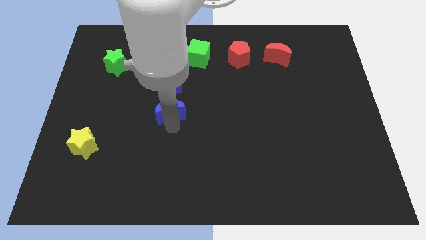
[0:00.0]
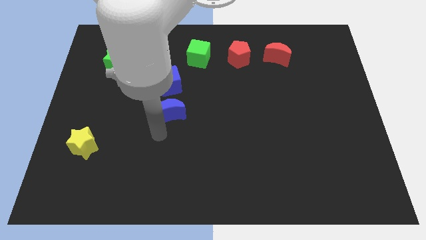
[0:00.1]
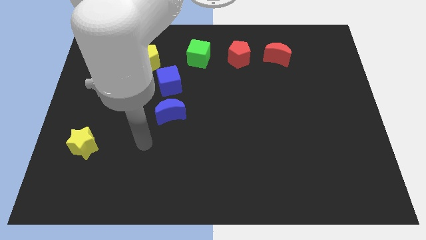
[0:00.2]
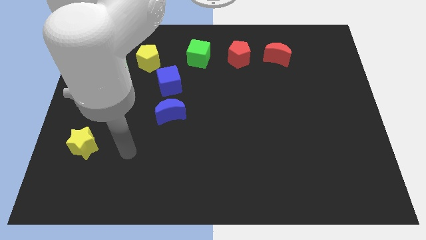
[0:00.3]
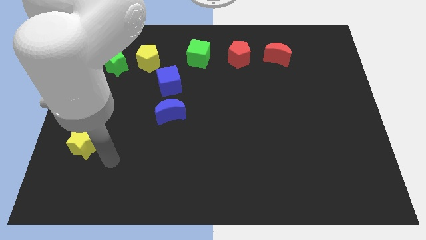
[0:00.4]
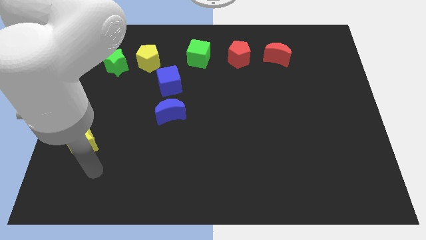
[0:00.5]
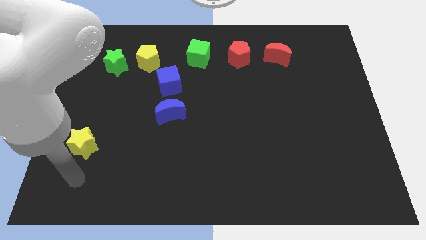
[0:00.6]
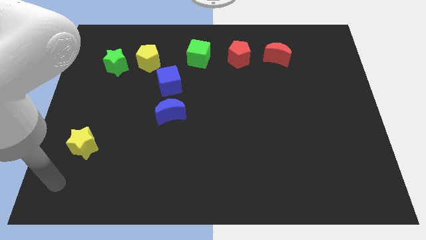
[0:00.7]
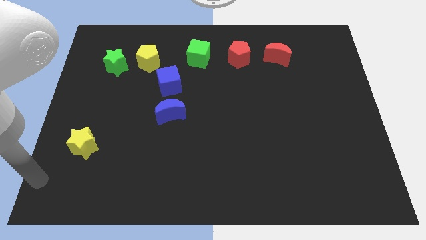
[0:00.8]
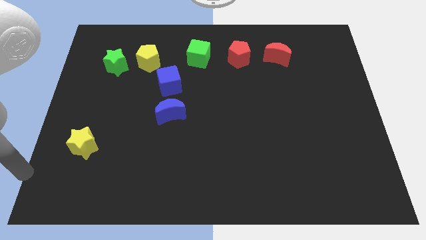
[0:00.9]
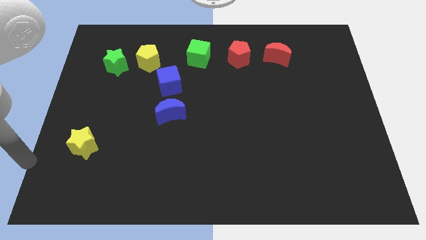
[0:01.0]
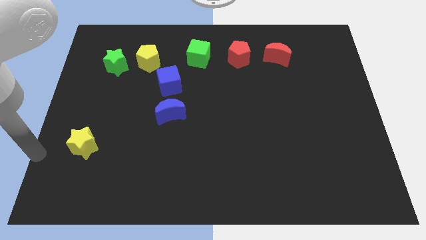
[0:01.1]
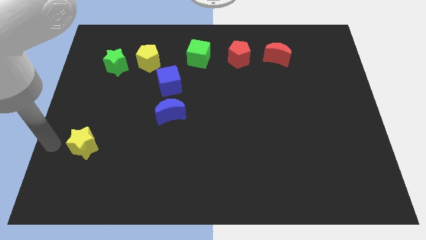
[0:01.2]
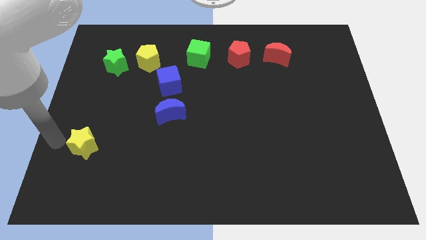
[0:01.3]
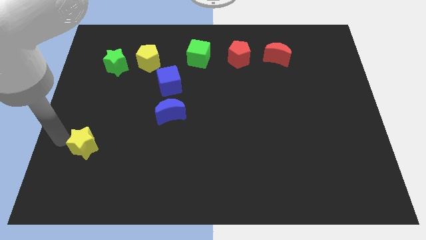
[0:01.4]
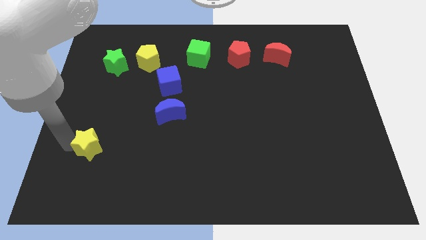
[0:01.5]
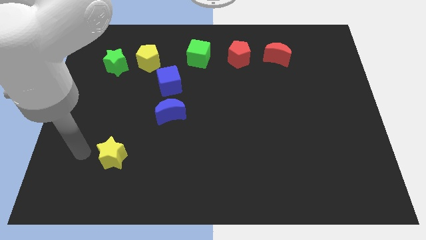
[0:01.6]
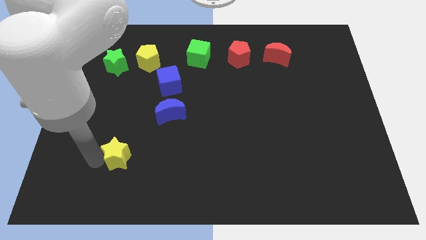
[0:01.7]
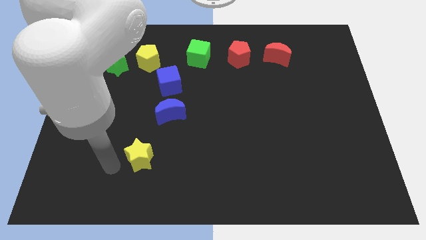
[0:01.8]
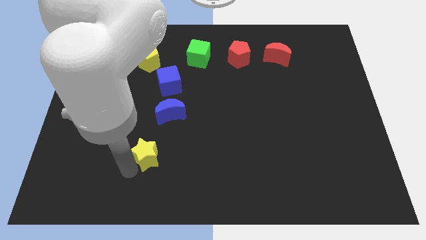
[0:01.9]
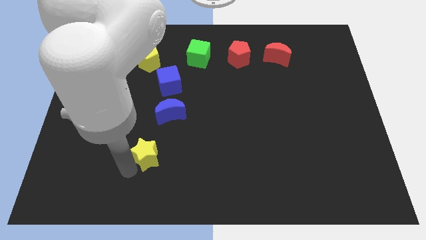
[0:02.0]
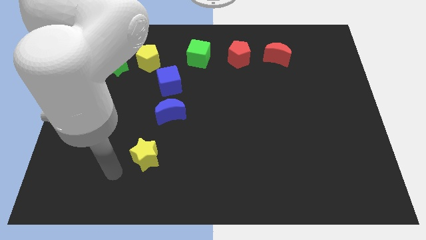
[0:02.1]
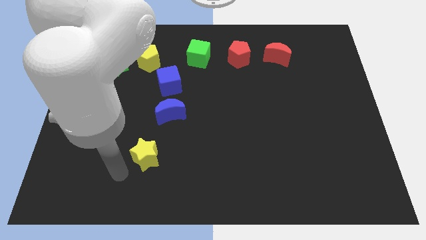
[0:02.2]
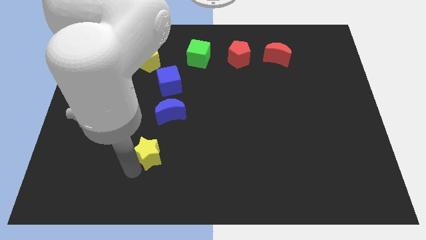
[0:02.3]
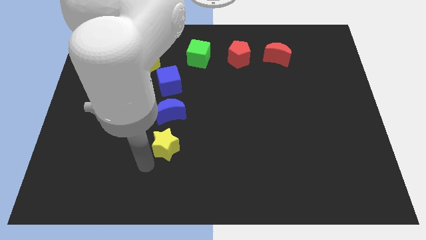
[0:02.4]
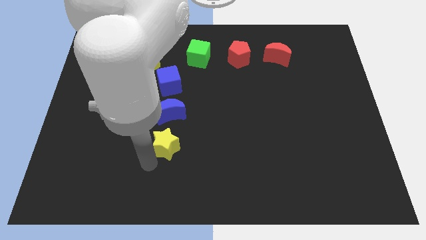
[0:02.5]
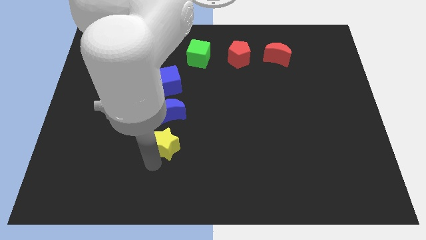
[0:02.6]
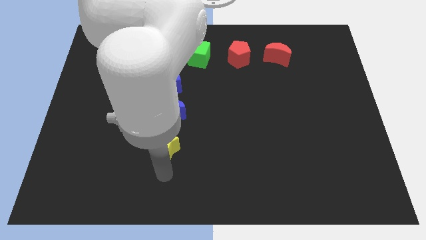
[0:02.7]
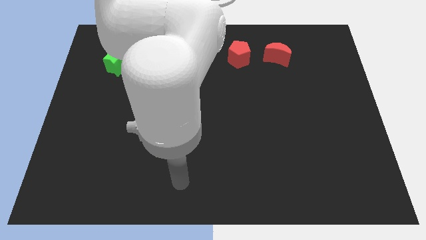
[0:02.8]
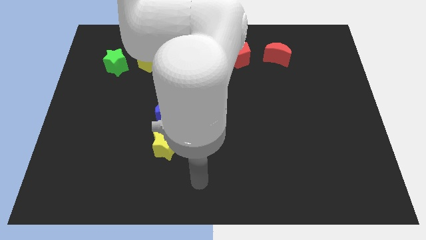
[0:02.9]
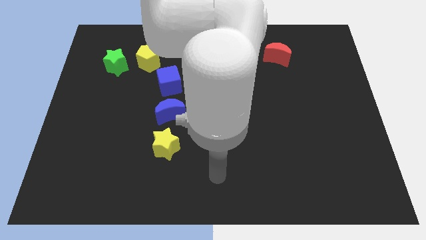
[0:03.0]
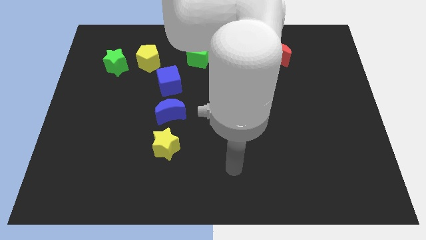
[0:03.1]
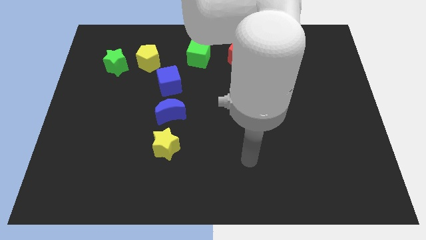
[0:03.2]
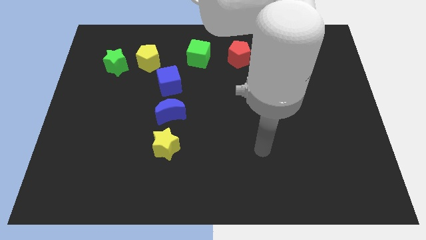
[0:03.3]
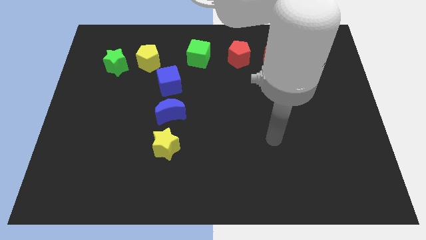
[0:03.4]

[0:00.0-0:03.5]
push the yellow star to the bottom side of the blue moon

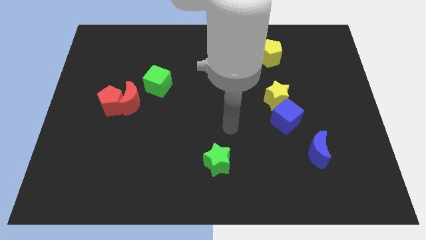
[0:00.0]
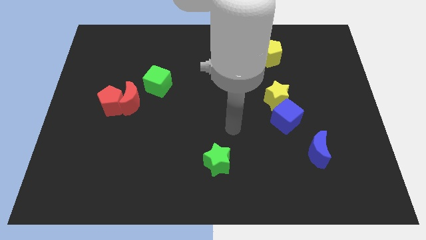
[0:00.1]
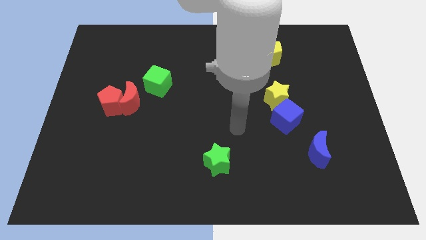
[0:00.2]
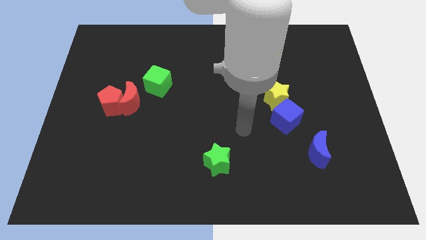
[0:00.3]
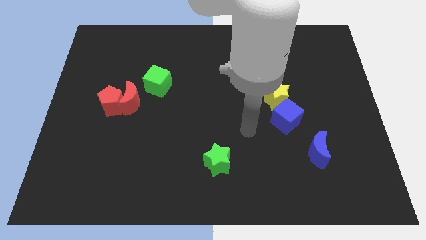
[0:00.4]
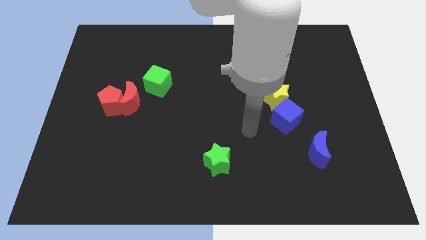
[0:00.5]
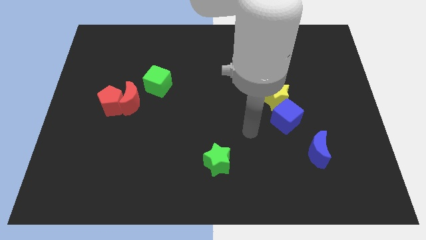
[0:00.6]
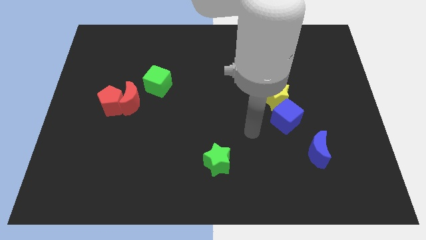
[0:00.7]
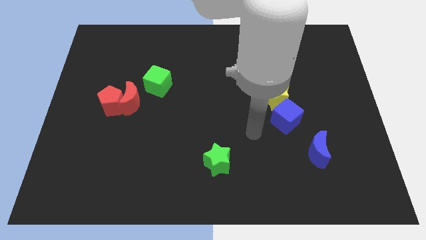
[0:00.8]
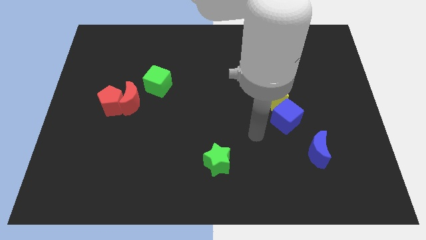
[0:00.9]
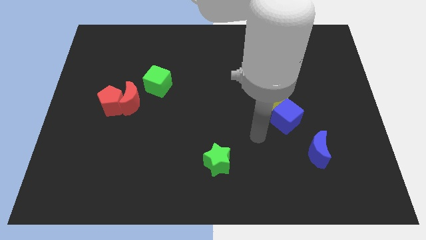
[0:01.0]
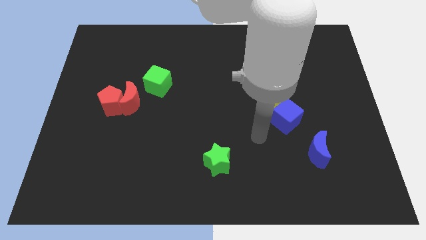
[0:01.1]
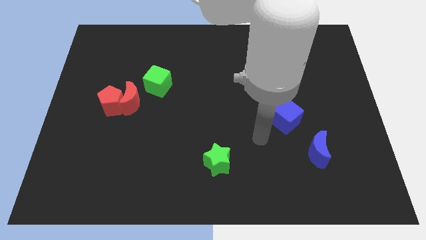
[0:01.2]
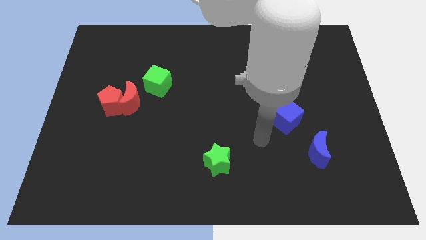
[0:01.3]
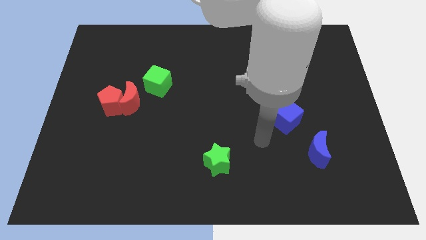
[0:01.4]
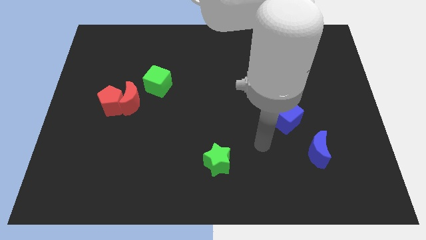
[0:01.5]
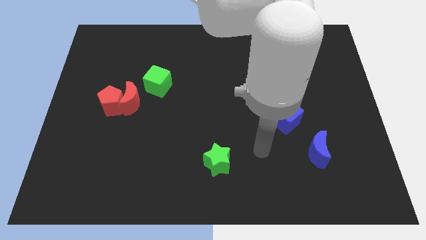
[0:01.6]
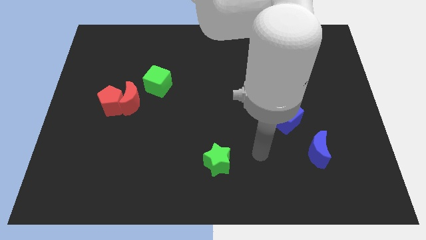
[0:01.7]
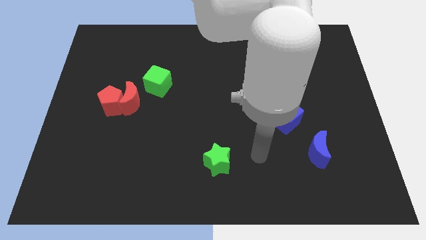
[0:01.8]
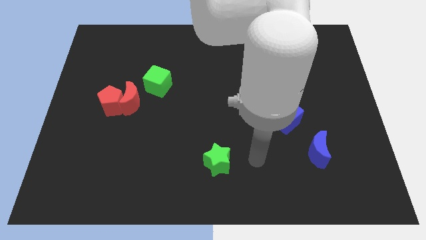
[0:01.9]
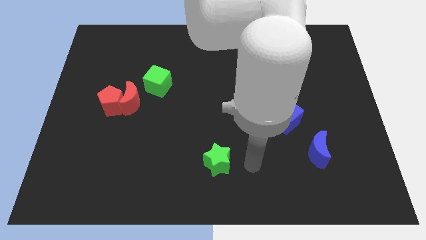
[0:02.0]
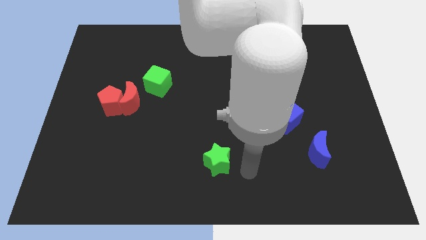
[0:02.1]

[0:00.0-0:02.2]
go to the right side of the green star

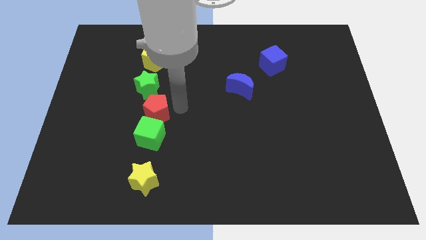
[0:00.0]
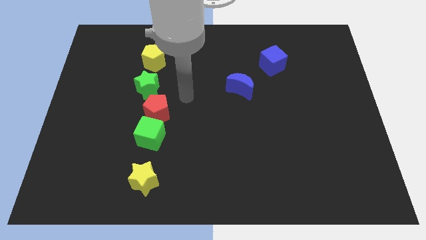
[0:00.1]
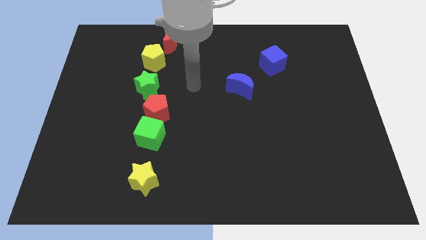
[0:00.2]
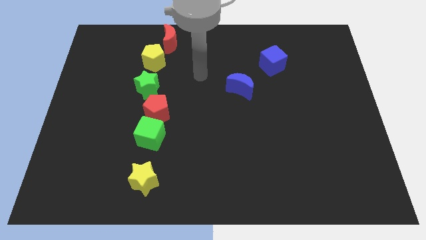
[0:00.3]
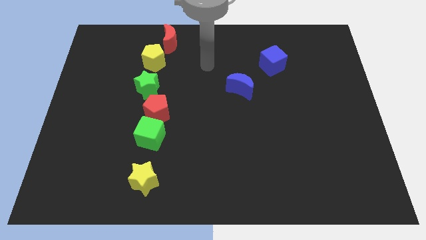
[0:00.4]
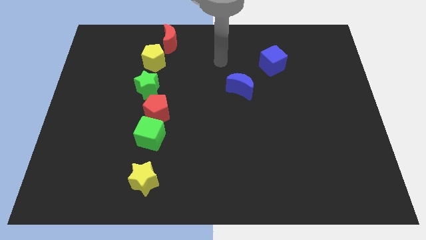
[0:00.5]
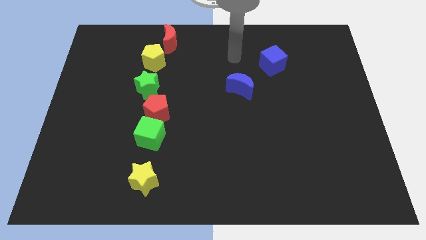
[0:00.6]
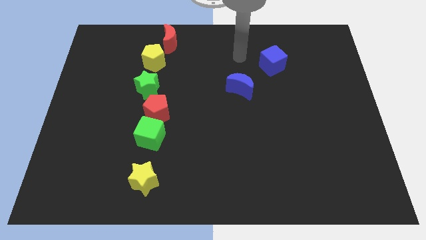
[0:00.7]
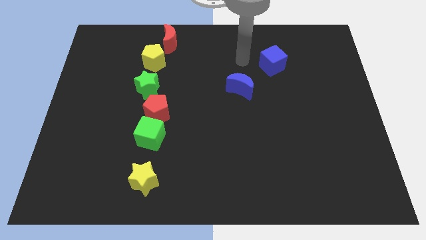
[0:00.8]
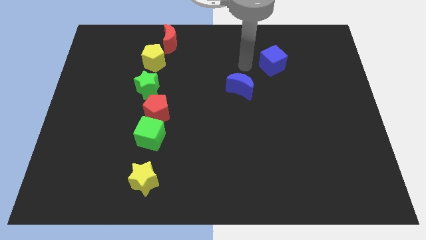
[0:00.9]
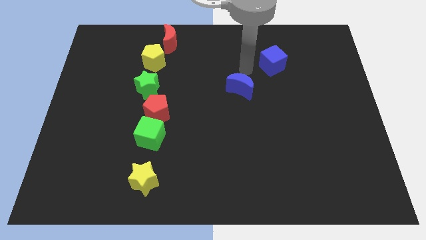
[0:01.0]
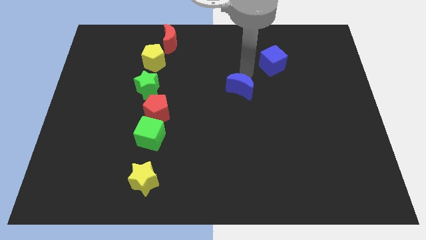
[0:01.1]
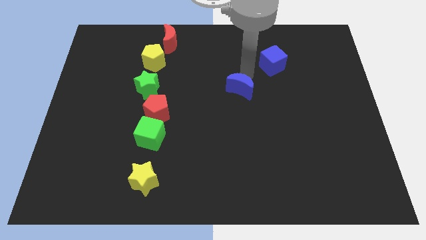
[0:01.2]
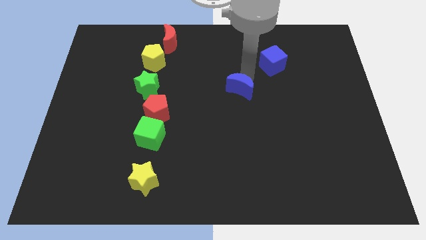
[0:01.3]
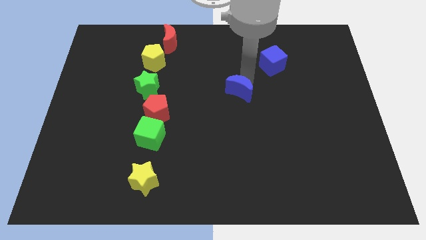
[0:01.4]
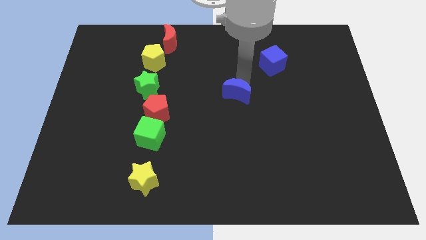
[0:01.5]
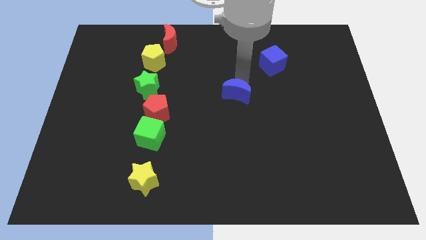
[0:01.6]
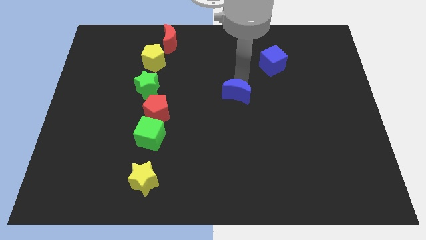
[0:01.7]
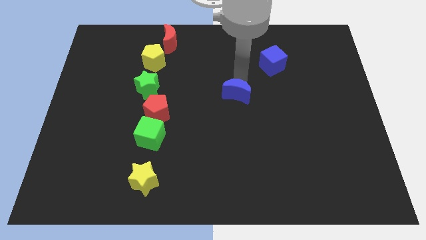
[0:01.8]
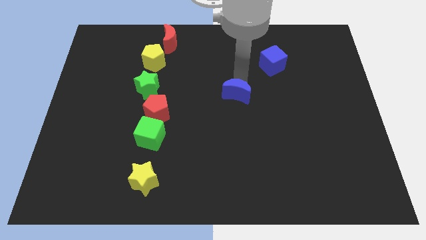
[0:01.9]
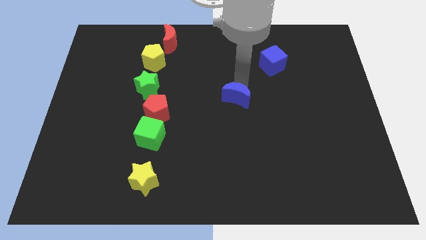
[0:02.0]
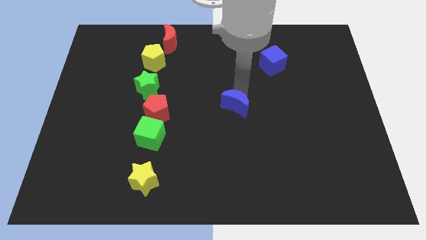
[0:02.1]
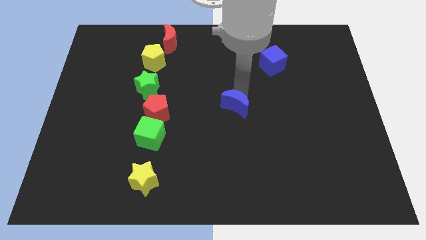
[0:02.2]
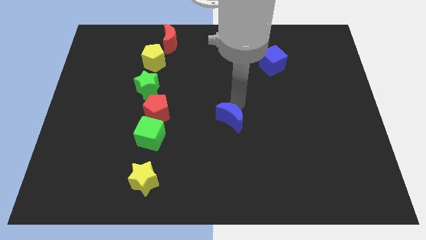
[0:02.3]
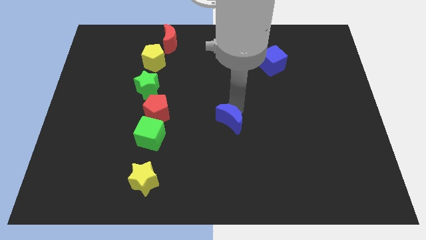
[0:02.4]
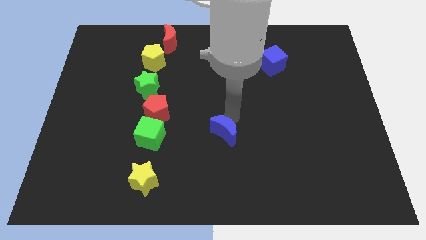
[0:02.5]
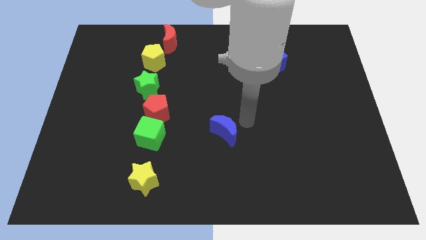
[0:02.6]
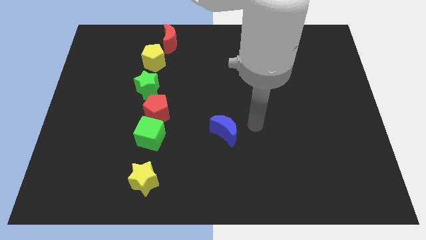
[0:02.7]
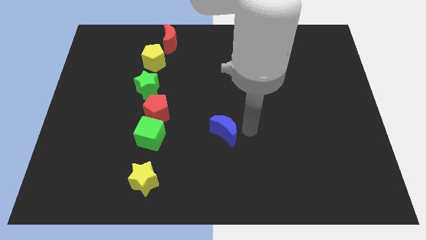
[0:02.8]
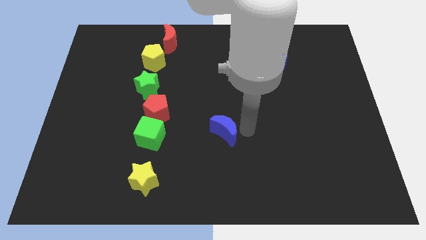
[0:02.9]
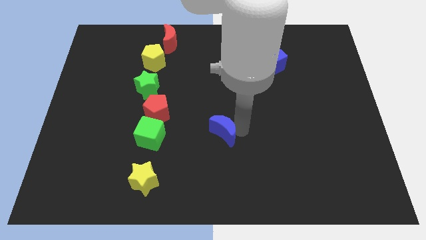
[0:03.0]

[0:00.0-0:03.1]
push the blue crescent to the right of the green cube

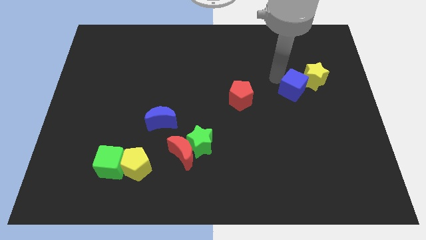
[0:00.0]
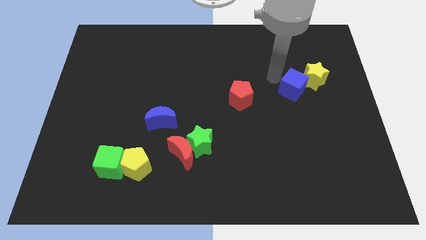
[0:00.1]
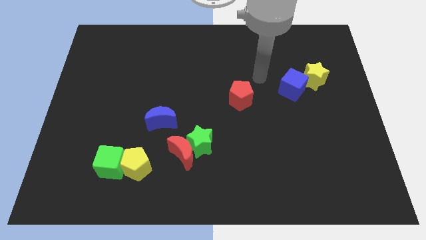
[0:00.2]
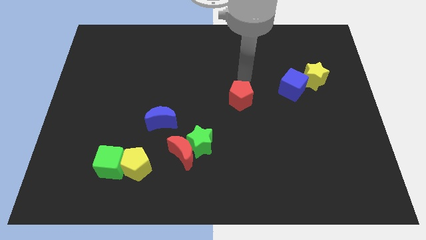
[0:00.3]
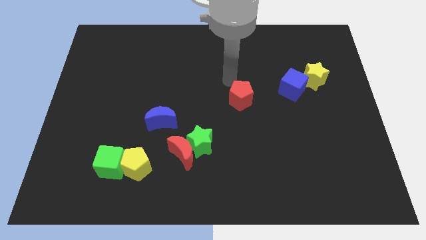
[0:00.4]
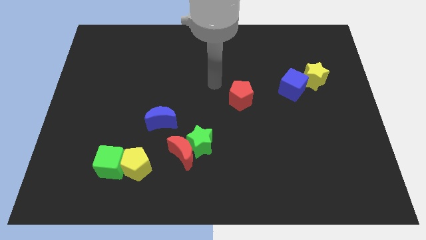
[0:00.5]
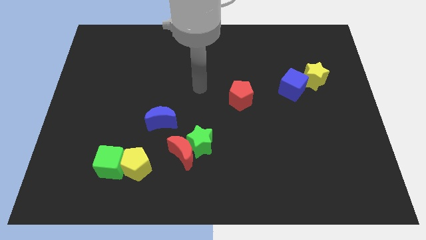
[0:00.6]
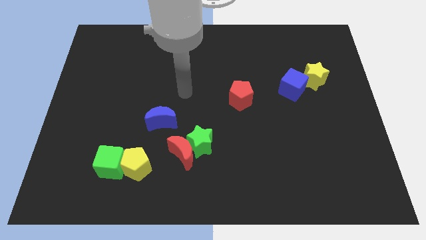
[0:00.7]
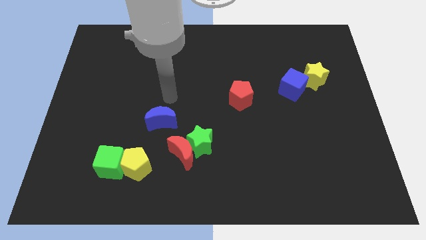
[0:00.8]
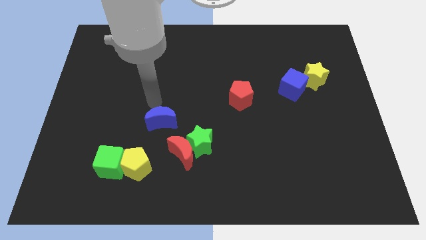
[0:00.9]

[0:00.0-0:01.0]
point your arm at the top of the blue crescent
